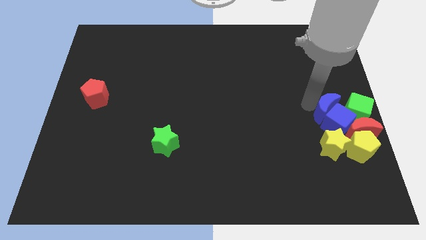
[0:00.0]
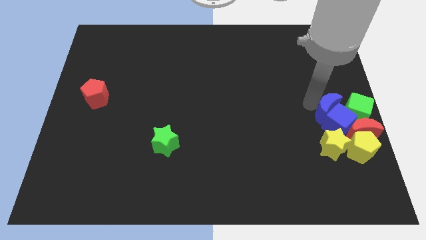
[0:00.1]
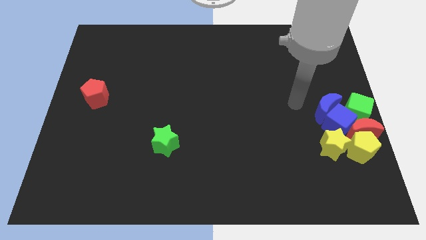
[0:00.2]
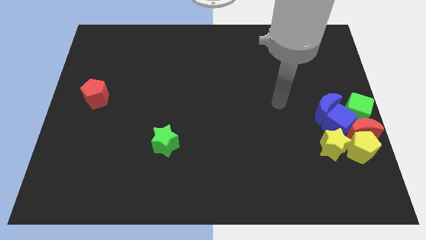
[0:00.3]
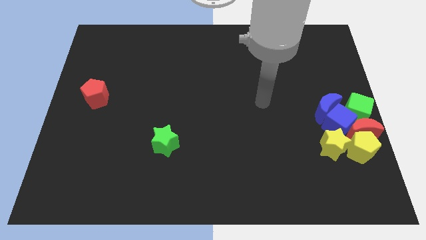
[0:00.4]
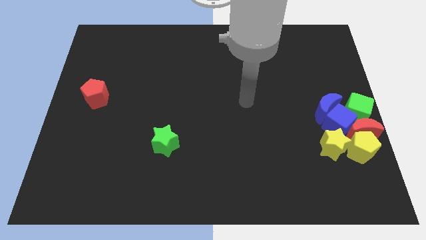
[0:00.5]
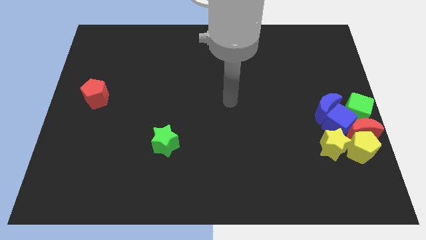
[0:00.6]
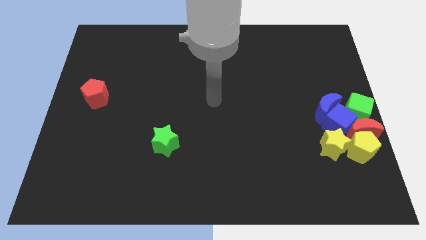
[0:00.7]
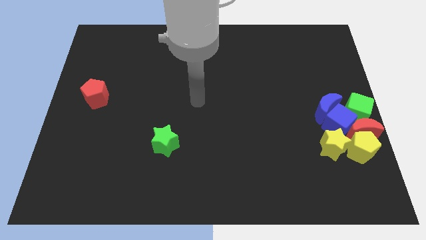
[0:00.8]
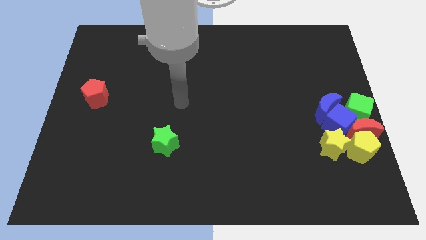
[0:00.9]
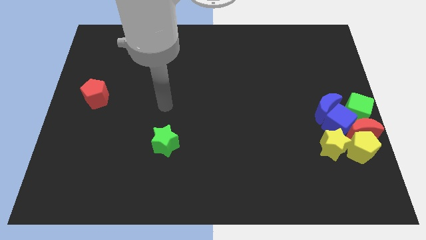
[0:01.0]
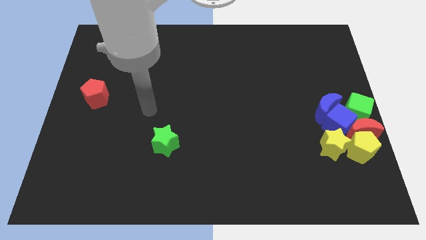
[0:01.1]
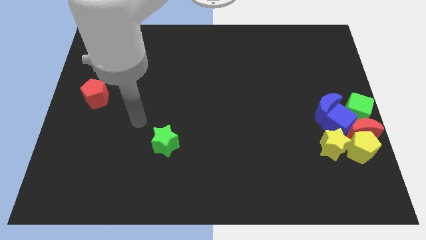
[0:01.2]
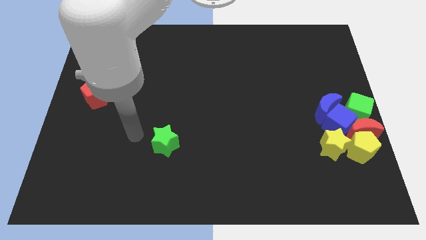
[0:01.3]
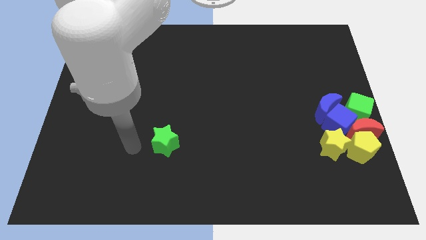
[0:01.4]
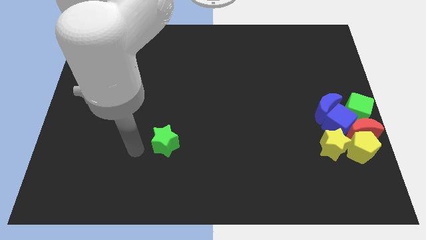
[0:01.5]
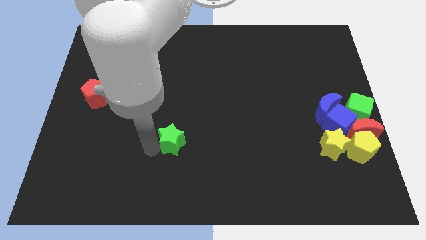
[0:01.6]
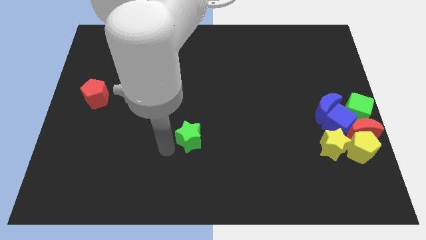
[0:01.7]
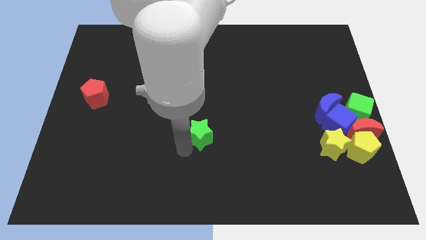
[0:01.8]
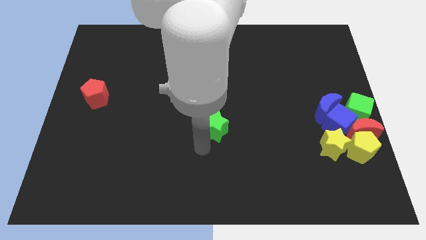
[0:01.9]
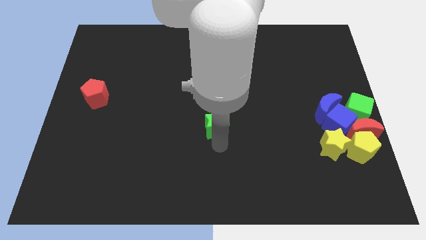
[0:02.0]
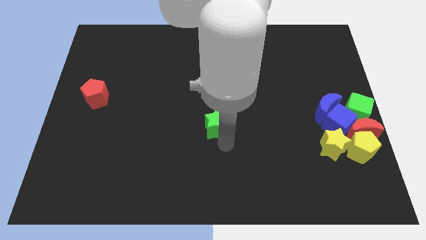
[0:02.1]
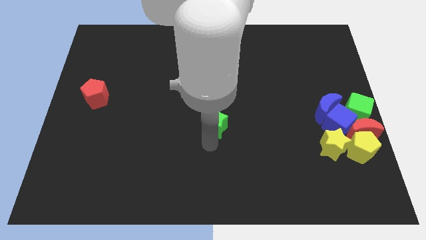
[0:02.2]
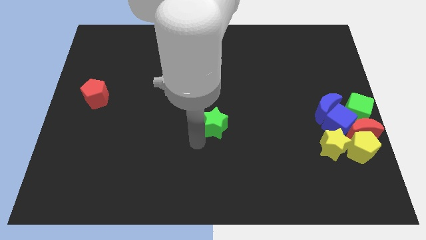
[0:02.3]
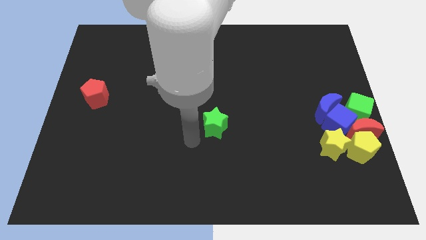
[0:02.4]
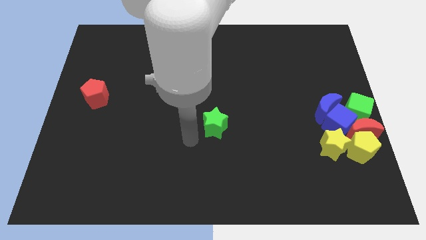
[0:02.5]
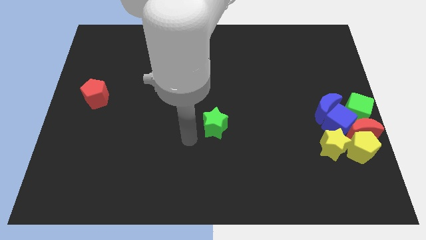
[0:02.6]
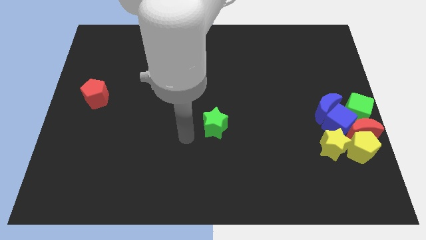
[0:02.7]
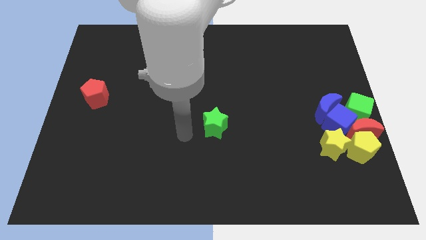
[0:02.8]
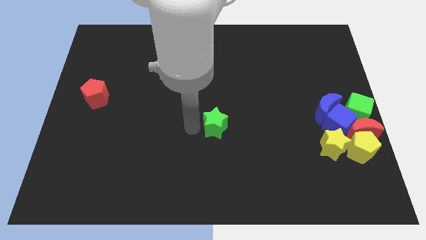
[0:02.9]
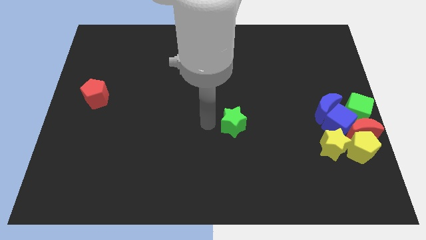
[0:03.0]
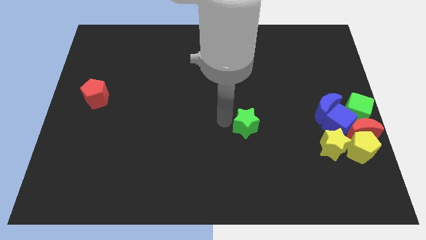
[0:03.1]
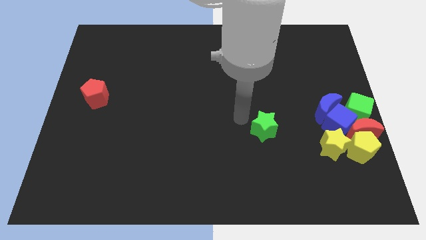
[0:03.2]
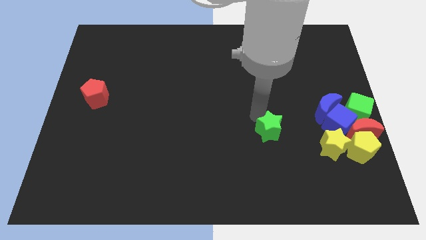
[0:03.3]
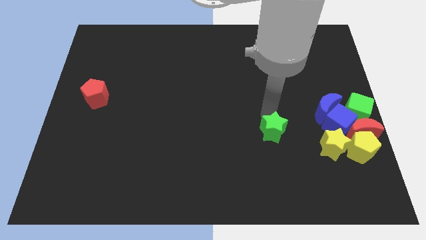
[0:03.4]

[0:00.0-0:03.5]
bring the green star towards the left side of the group of blocks

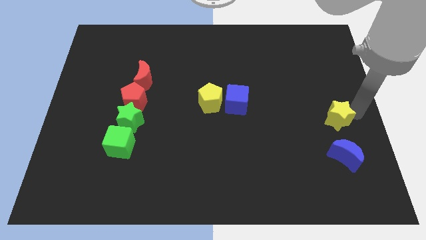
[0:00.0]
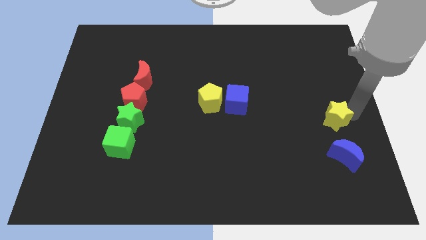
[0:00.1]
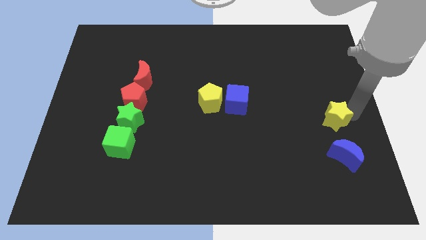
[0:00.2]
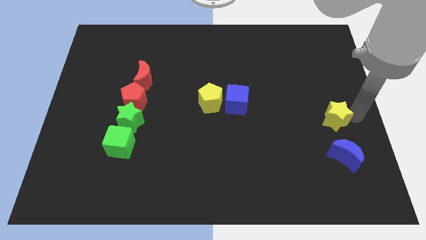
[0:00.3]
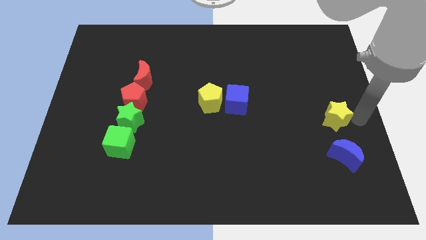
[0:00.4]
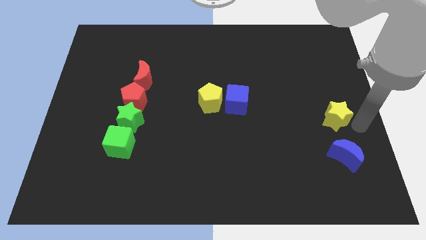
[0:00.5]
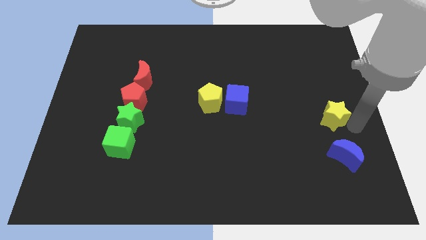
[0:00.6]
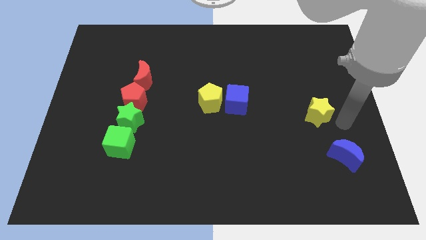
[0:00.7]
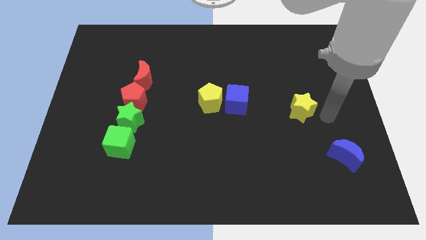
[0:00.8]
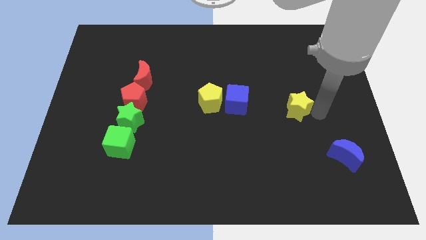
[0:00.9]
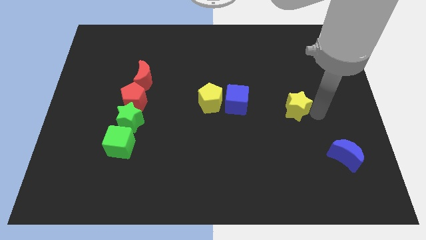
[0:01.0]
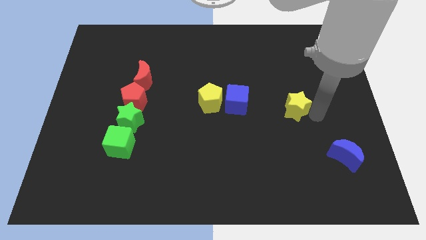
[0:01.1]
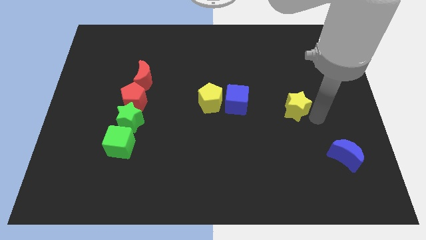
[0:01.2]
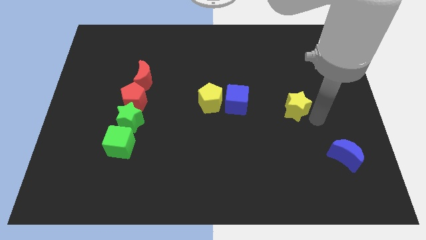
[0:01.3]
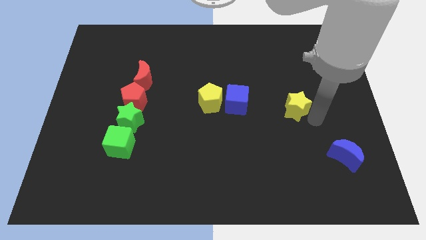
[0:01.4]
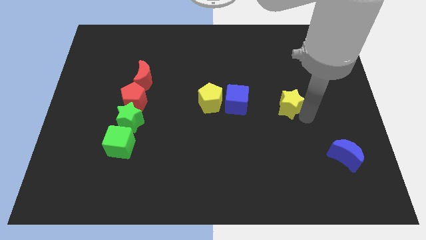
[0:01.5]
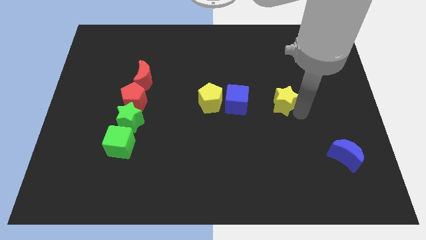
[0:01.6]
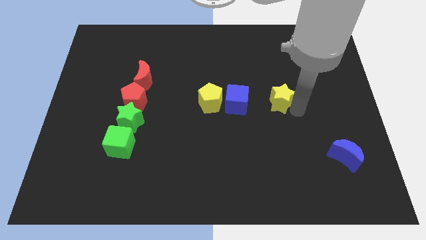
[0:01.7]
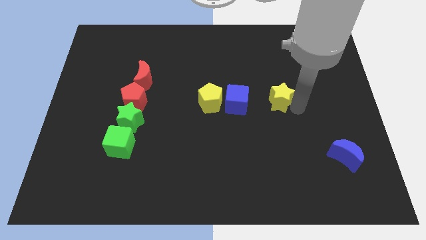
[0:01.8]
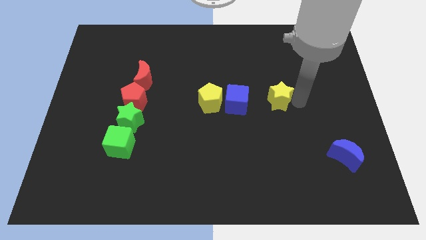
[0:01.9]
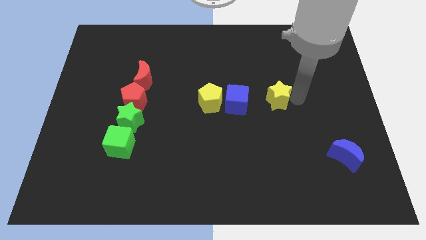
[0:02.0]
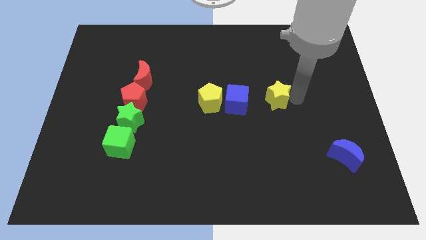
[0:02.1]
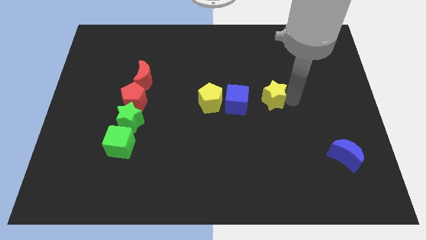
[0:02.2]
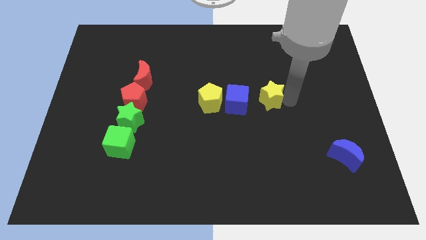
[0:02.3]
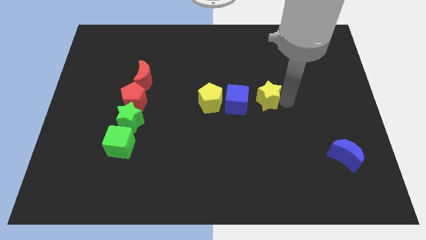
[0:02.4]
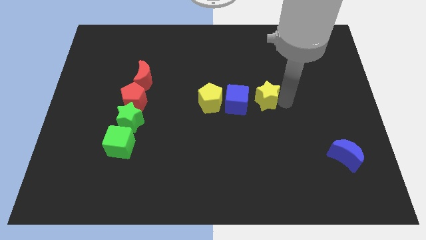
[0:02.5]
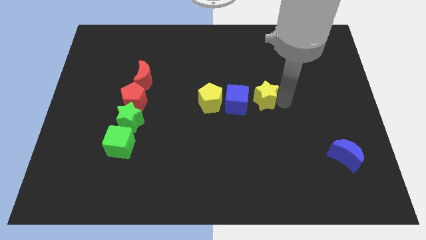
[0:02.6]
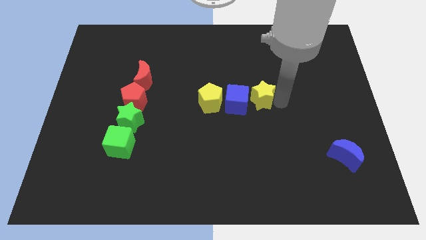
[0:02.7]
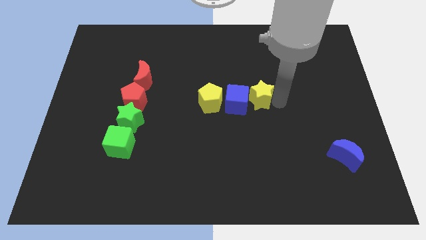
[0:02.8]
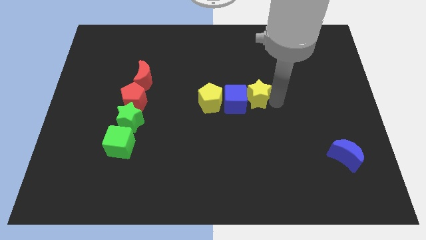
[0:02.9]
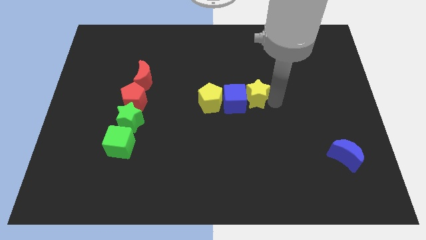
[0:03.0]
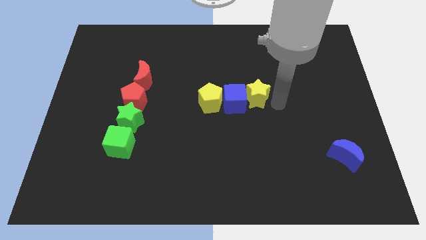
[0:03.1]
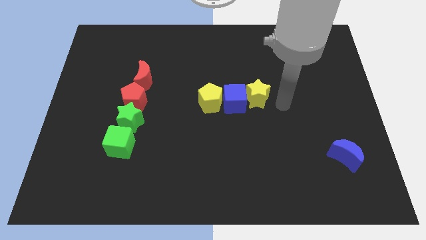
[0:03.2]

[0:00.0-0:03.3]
push the yellow star into the right side of the blue cube

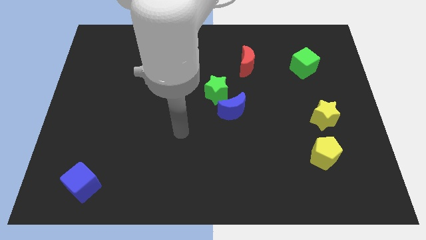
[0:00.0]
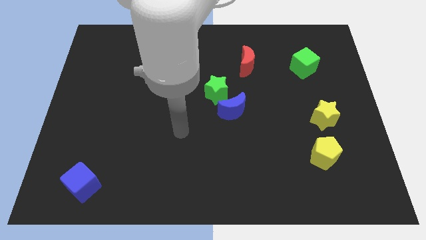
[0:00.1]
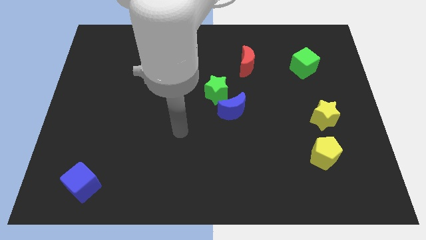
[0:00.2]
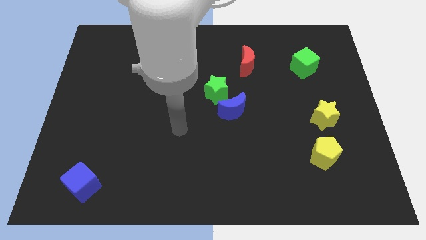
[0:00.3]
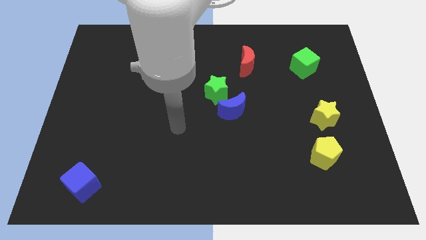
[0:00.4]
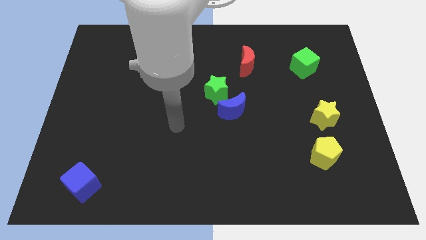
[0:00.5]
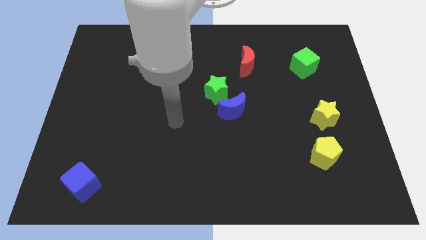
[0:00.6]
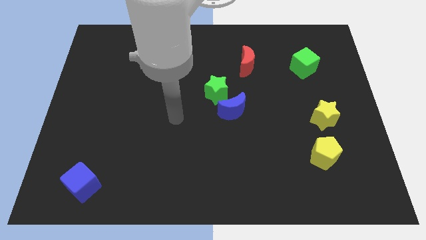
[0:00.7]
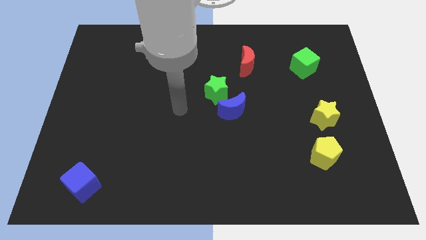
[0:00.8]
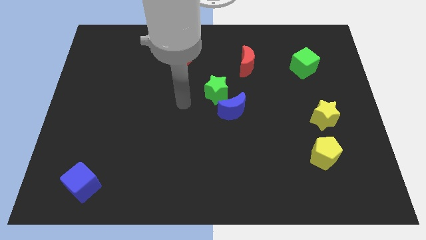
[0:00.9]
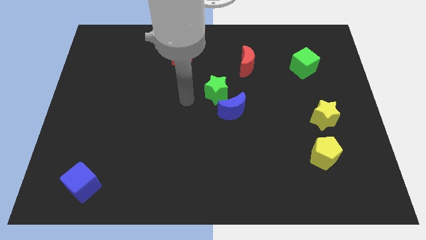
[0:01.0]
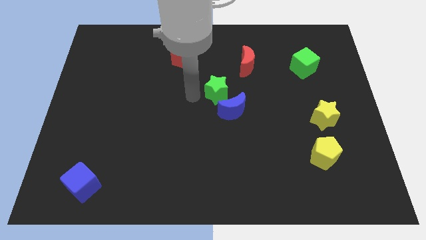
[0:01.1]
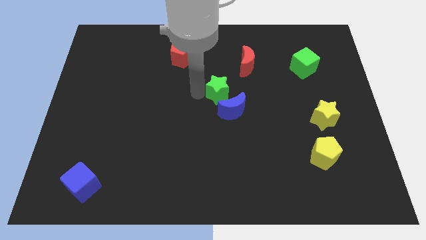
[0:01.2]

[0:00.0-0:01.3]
move yourself close to the left side of the green star

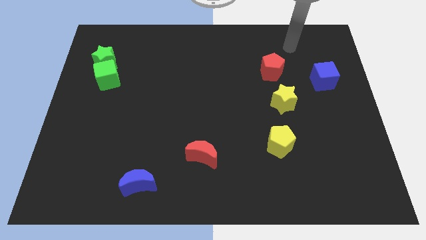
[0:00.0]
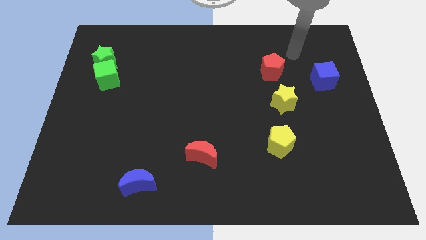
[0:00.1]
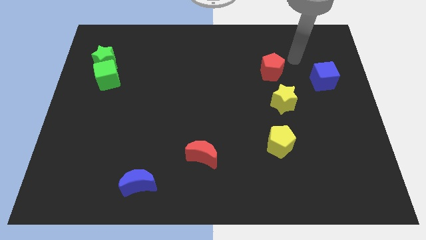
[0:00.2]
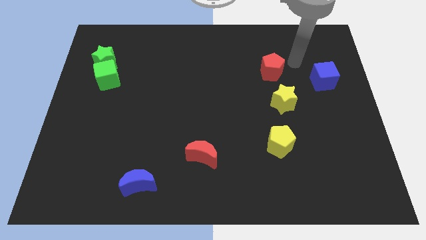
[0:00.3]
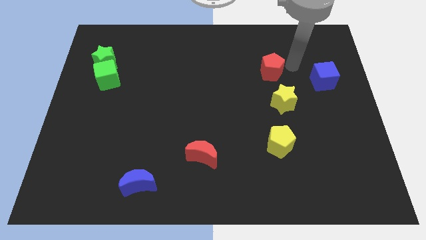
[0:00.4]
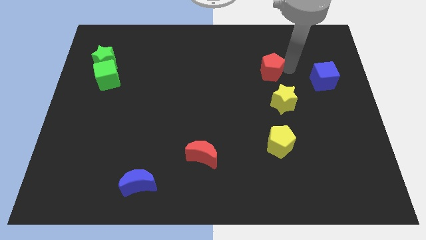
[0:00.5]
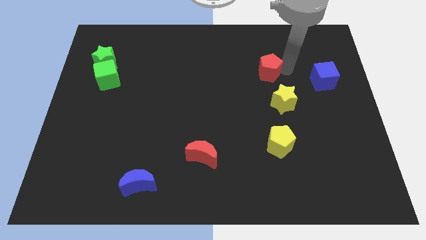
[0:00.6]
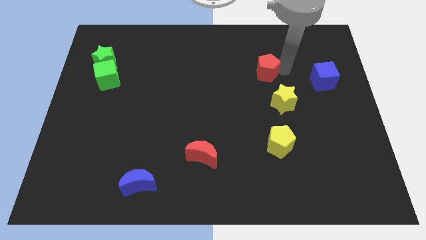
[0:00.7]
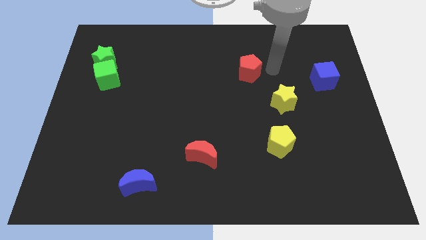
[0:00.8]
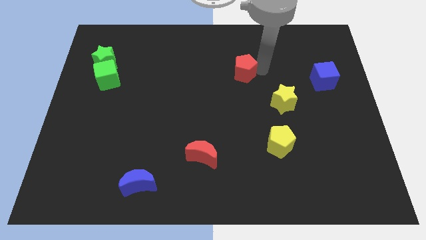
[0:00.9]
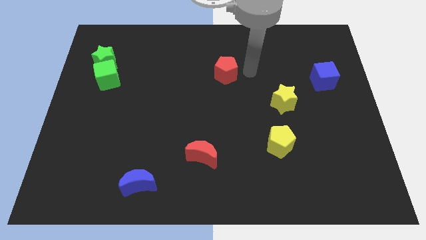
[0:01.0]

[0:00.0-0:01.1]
push the red pentagon slightly to the left
